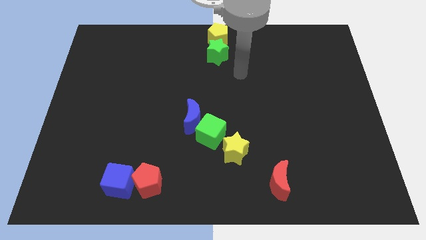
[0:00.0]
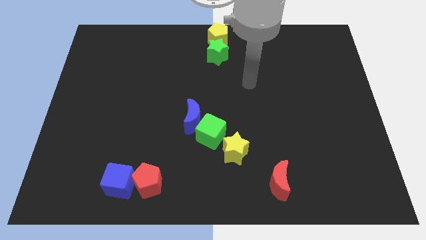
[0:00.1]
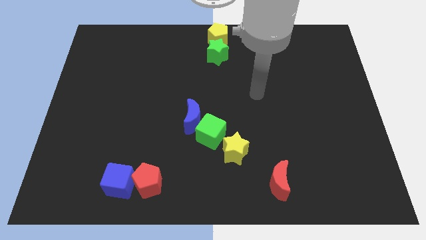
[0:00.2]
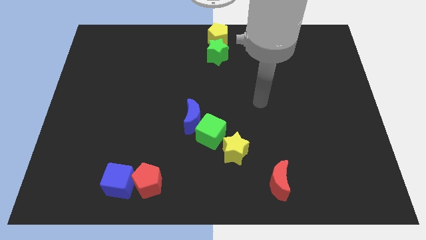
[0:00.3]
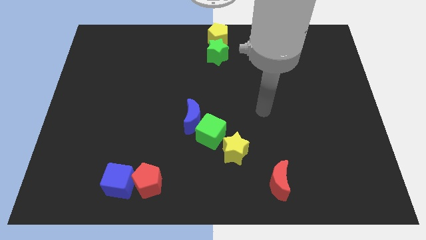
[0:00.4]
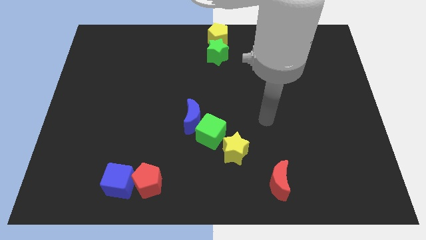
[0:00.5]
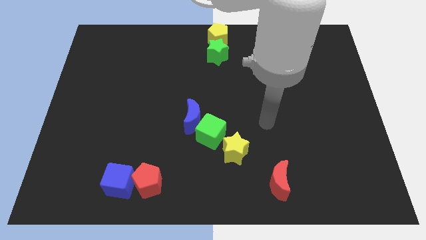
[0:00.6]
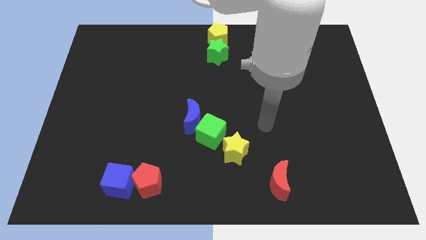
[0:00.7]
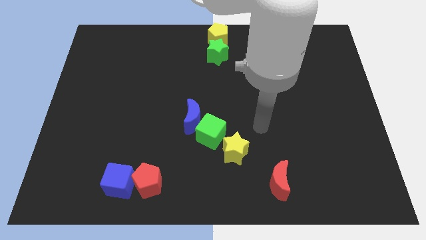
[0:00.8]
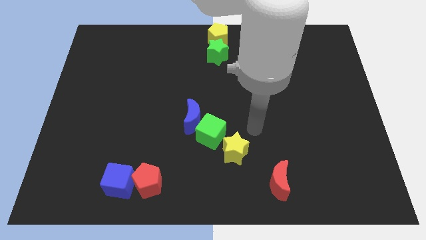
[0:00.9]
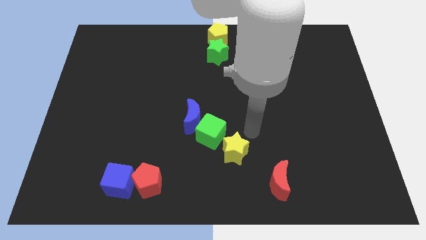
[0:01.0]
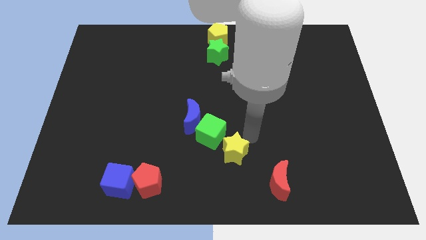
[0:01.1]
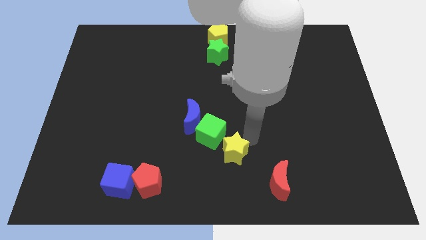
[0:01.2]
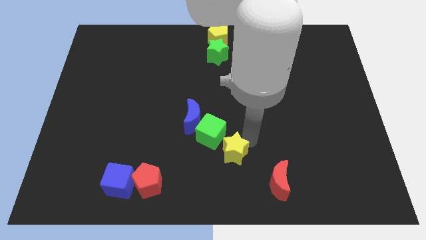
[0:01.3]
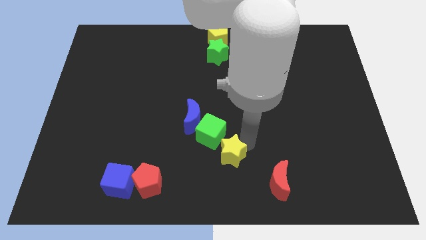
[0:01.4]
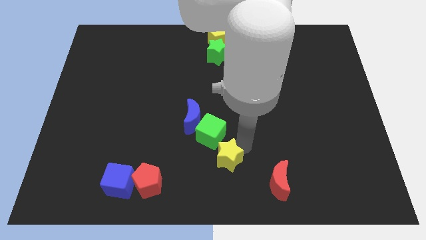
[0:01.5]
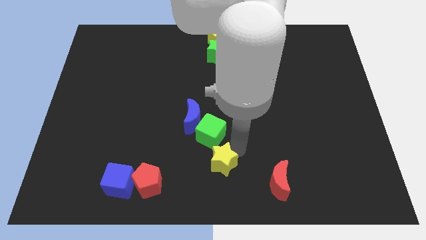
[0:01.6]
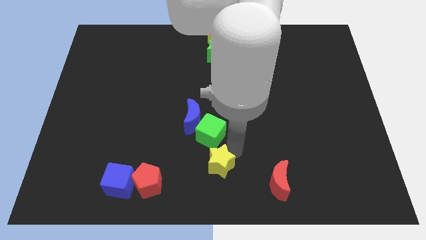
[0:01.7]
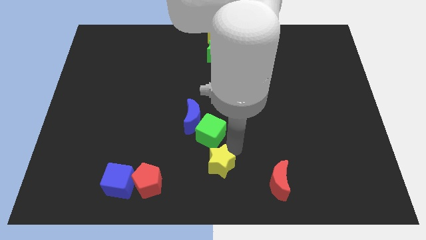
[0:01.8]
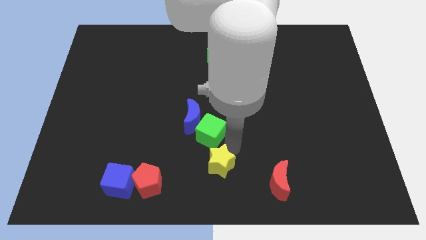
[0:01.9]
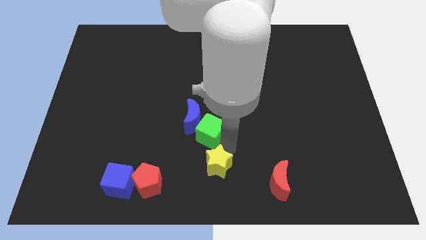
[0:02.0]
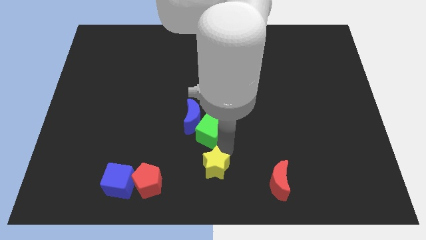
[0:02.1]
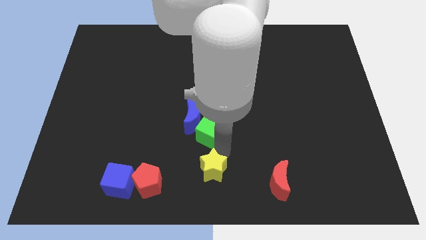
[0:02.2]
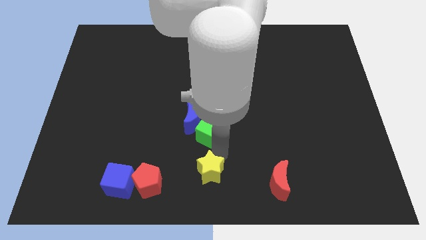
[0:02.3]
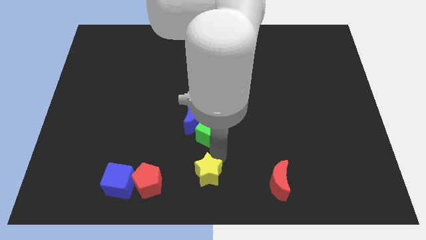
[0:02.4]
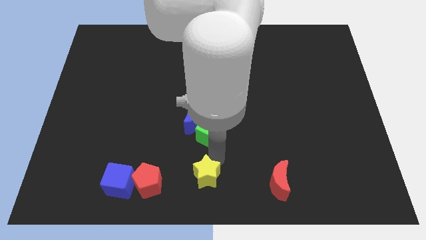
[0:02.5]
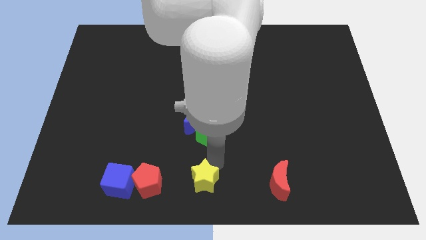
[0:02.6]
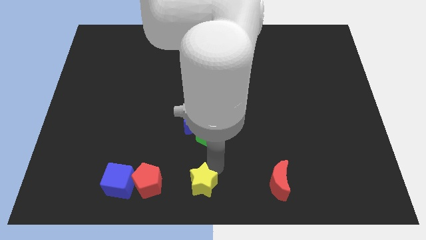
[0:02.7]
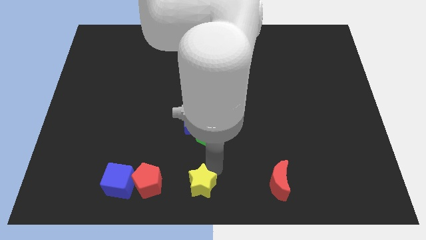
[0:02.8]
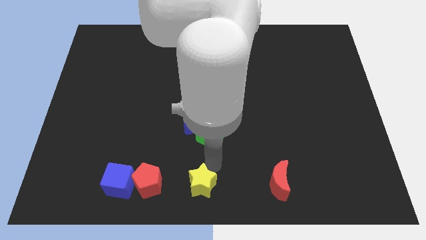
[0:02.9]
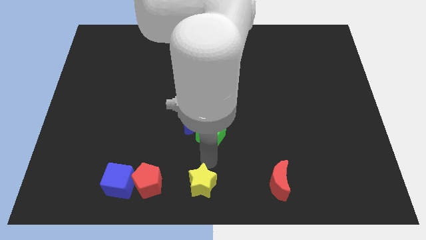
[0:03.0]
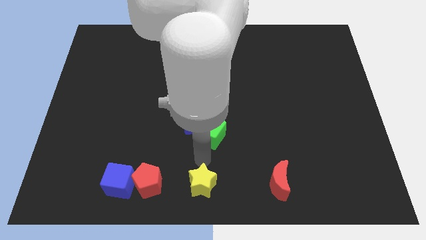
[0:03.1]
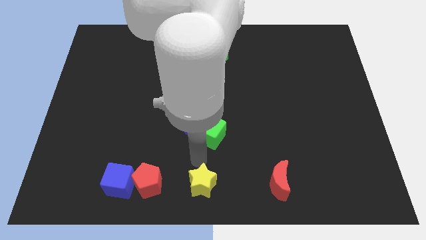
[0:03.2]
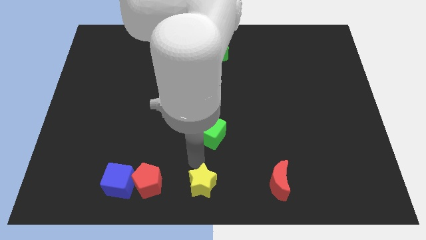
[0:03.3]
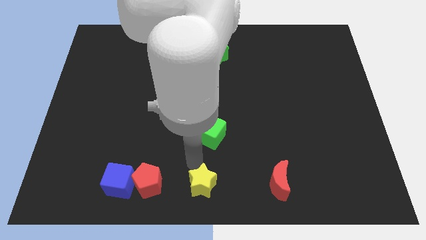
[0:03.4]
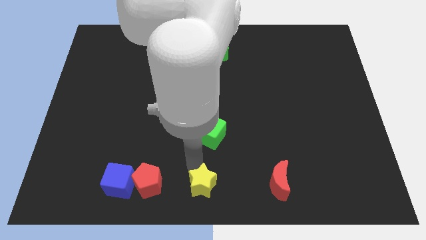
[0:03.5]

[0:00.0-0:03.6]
move the yellow star to the right of red pentagon

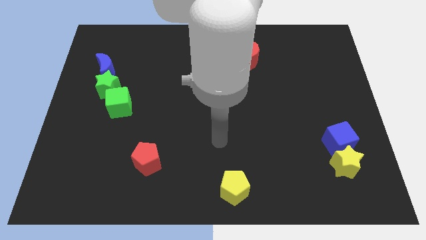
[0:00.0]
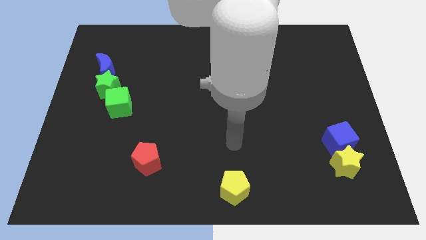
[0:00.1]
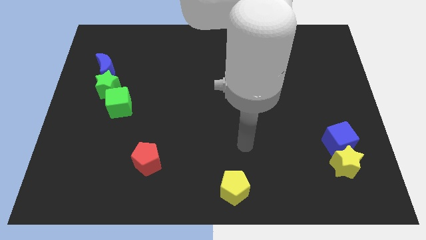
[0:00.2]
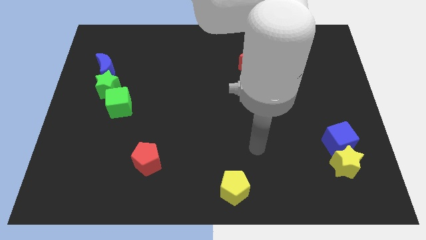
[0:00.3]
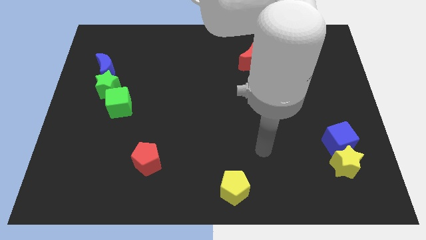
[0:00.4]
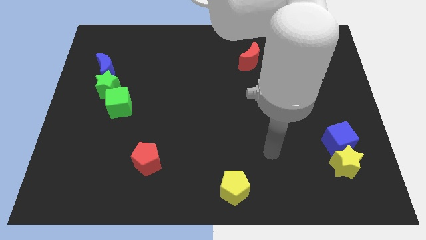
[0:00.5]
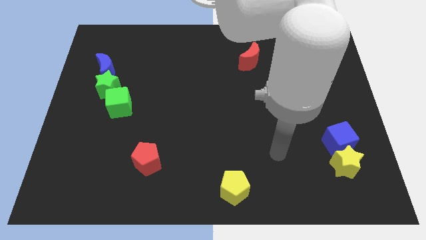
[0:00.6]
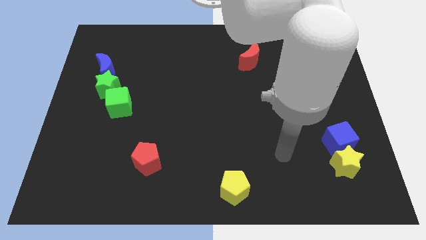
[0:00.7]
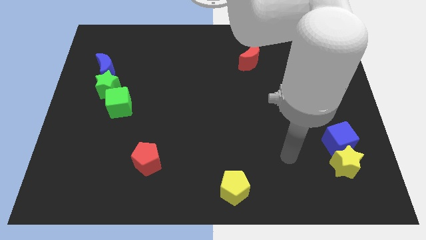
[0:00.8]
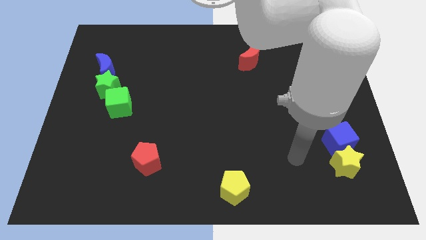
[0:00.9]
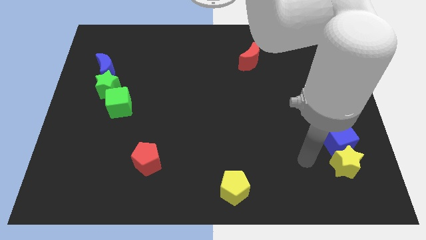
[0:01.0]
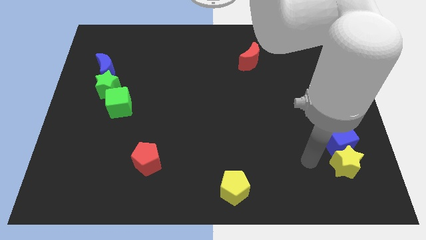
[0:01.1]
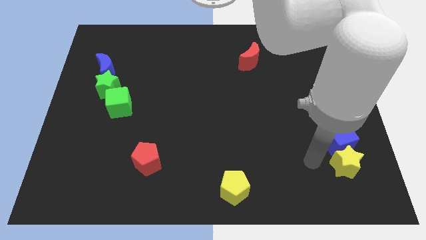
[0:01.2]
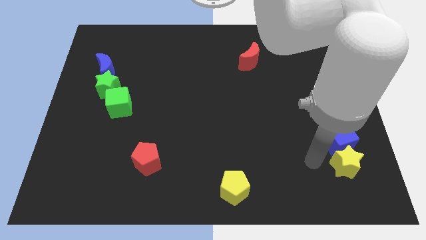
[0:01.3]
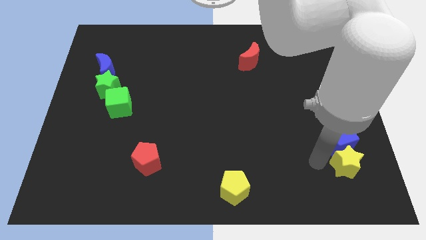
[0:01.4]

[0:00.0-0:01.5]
point the arm at the left side of the yellow pentagon

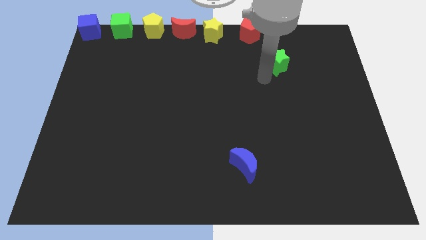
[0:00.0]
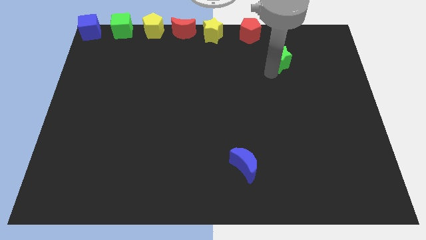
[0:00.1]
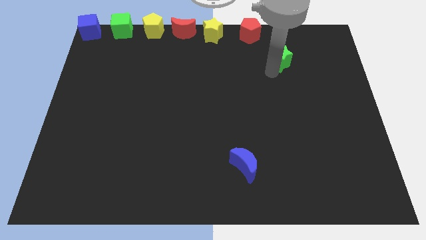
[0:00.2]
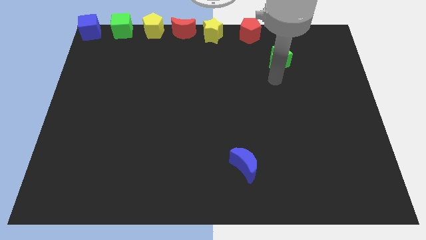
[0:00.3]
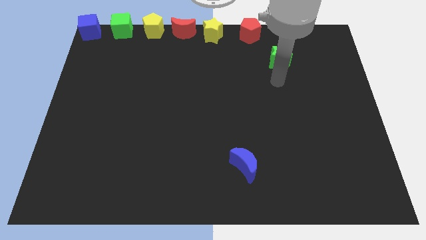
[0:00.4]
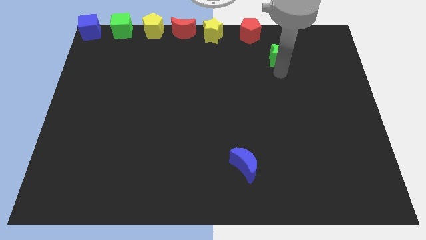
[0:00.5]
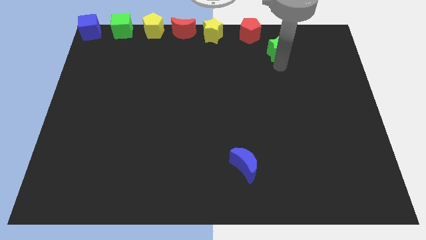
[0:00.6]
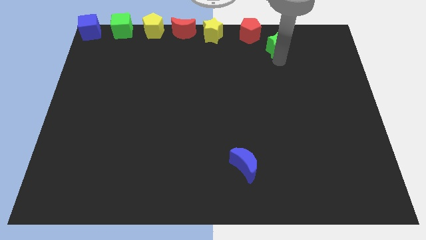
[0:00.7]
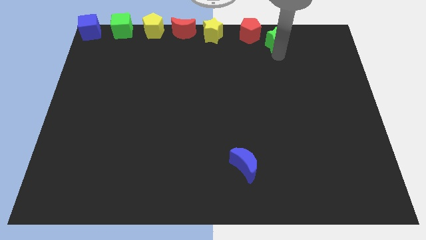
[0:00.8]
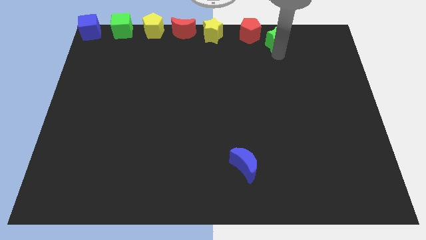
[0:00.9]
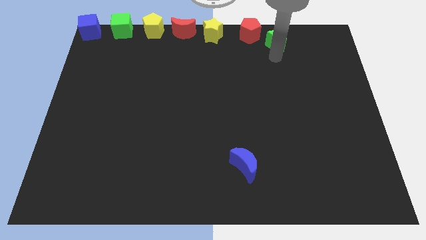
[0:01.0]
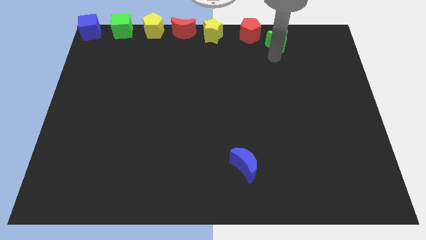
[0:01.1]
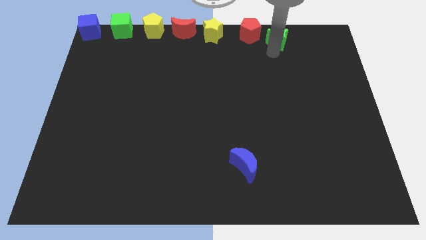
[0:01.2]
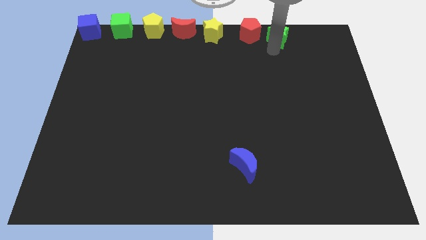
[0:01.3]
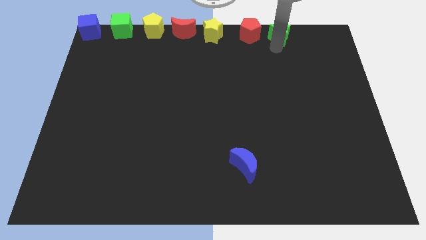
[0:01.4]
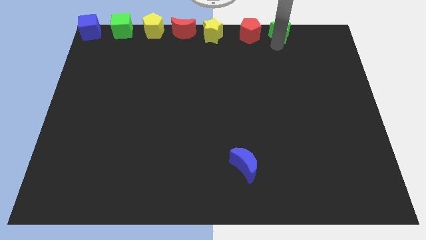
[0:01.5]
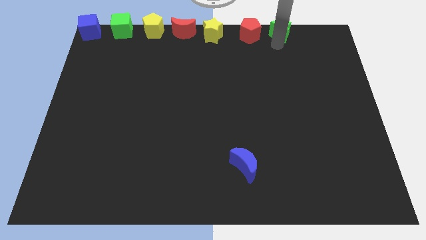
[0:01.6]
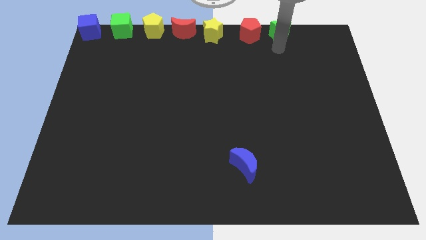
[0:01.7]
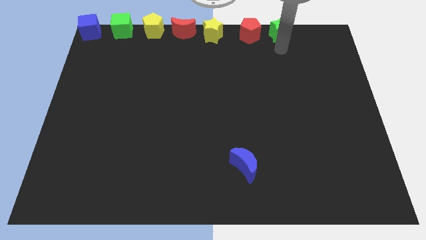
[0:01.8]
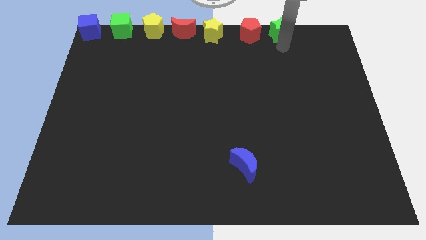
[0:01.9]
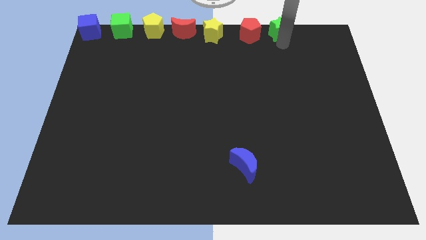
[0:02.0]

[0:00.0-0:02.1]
place the green star right to the red pentagon

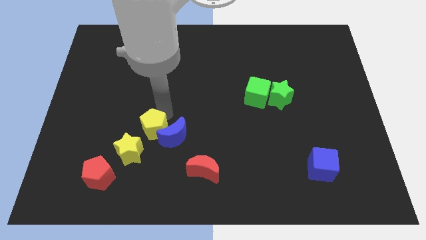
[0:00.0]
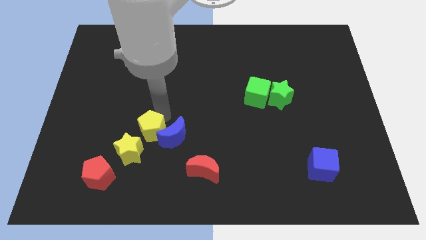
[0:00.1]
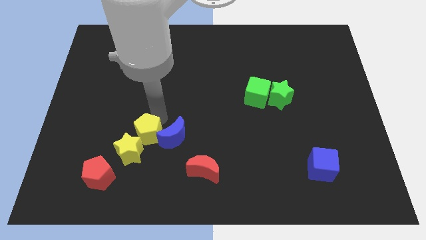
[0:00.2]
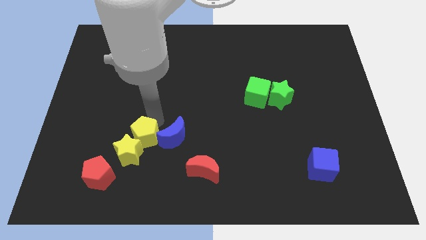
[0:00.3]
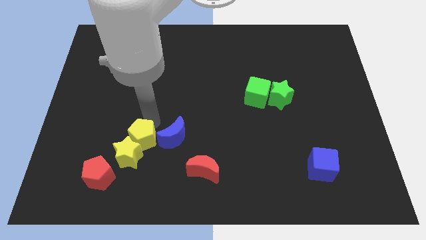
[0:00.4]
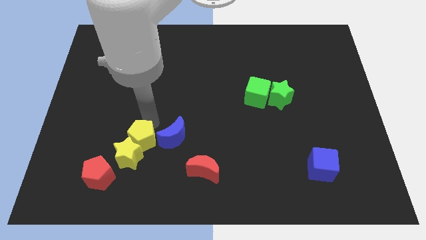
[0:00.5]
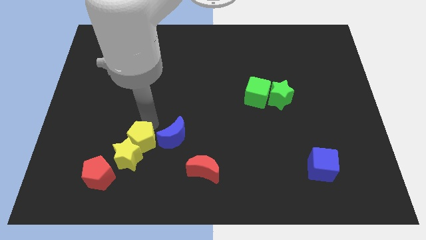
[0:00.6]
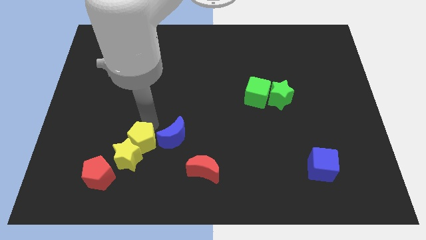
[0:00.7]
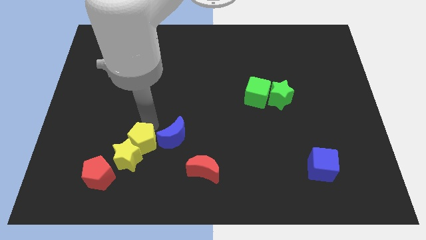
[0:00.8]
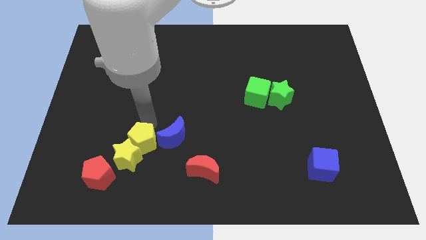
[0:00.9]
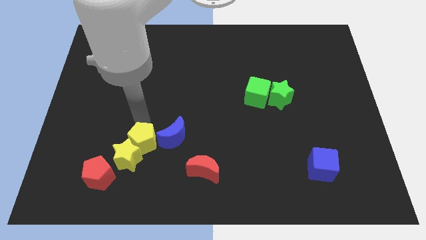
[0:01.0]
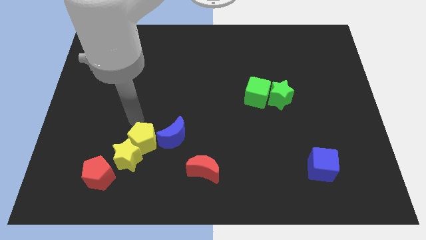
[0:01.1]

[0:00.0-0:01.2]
push yellow pentagon in to yellow star

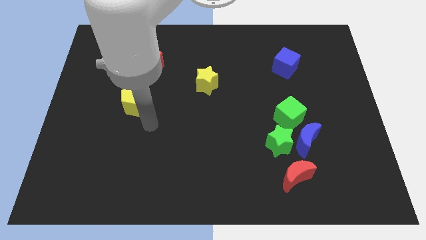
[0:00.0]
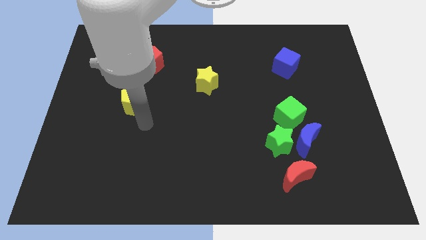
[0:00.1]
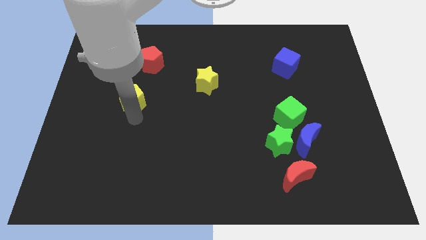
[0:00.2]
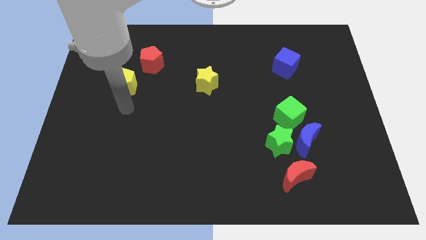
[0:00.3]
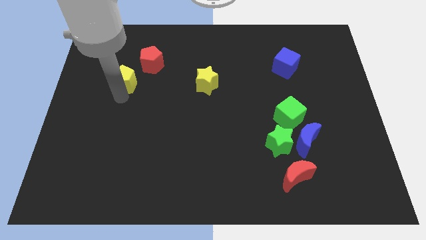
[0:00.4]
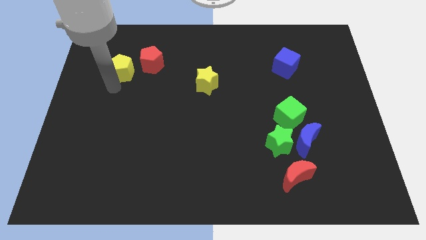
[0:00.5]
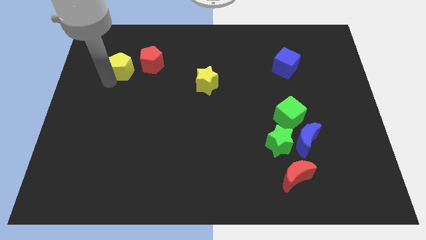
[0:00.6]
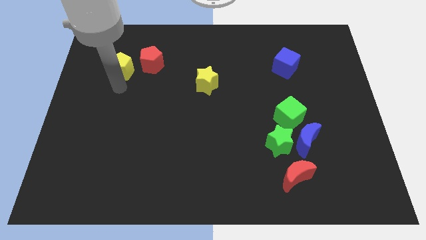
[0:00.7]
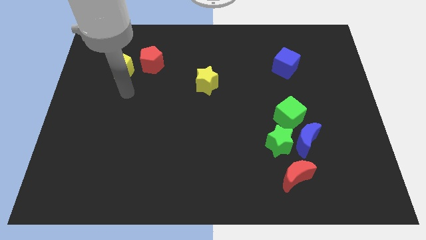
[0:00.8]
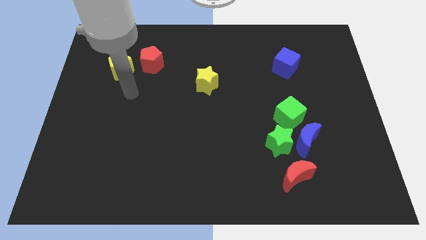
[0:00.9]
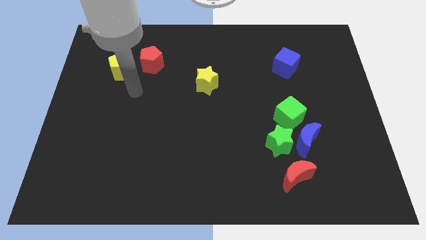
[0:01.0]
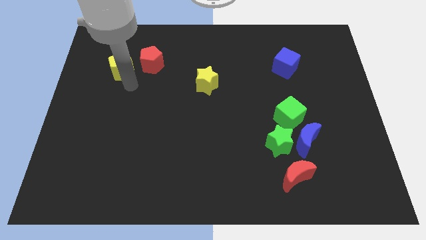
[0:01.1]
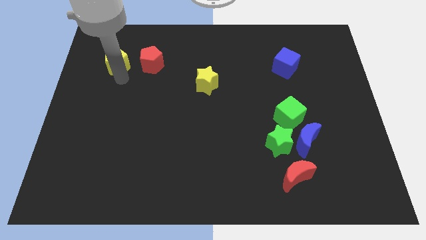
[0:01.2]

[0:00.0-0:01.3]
drag the yellow pentagon diagonally bottom left to the red pentagon
